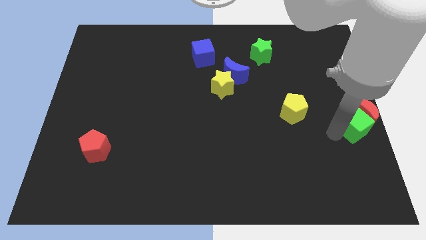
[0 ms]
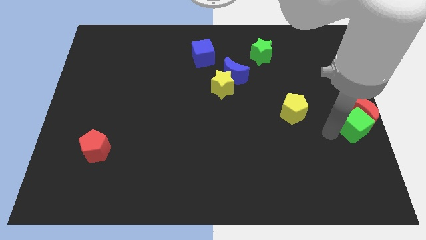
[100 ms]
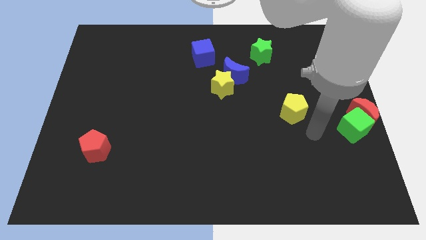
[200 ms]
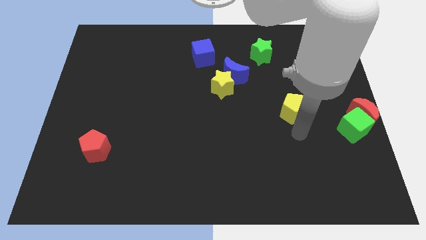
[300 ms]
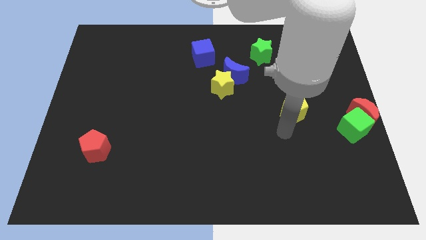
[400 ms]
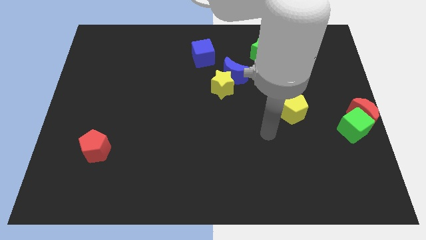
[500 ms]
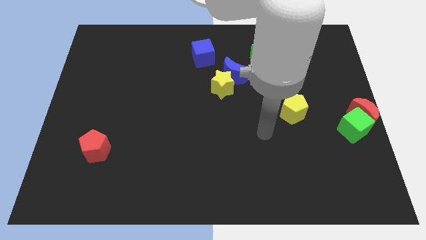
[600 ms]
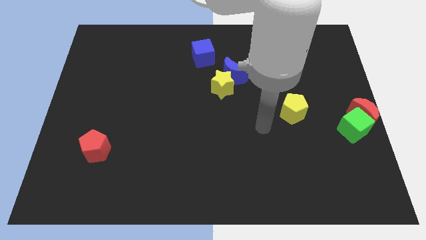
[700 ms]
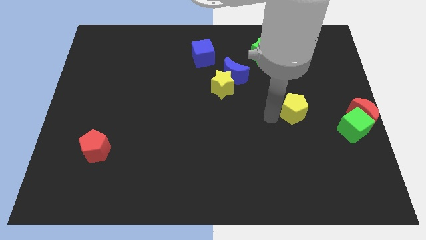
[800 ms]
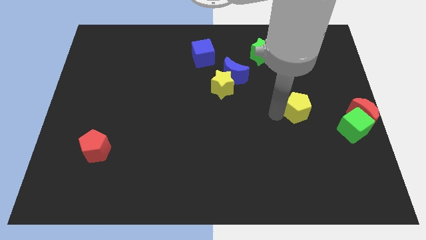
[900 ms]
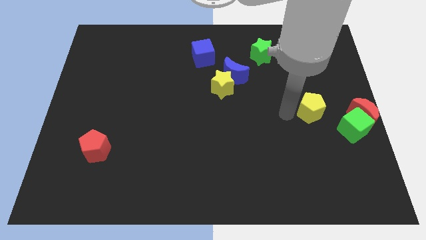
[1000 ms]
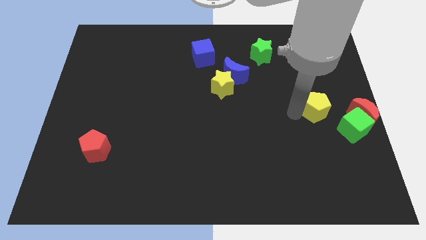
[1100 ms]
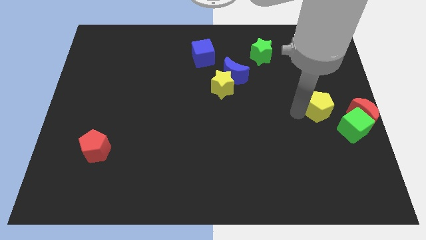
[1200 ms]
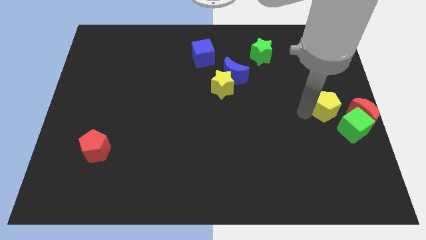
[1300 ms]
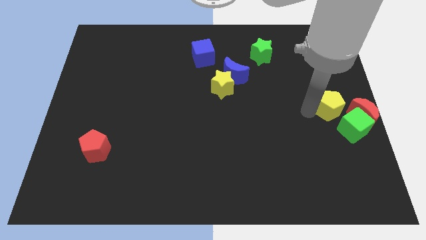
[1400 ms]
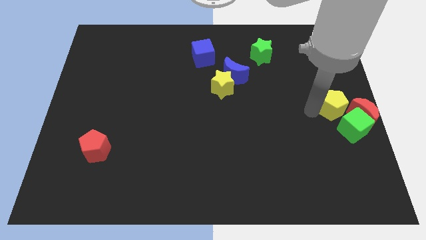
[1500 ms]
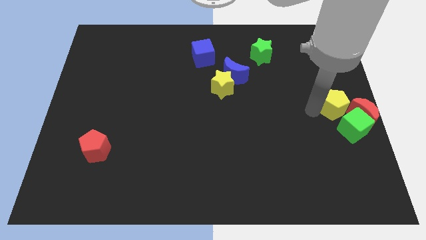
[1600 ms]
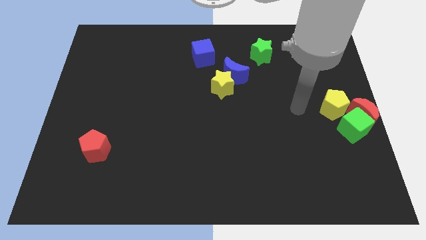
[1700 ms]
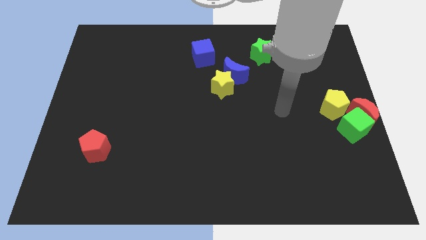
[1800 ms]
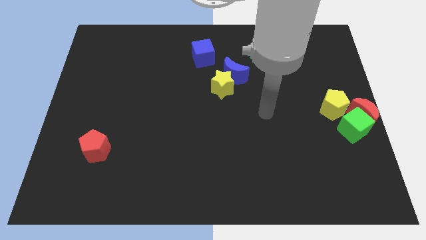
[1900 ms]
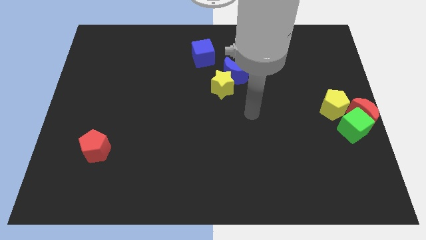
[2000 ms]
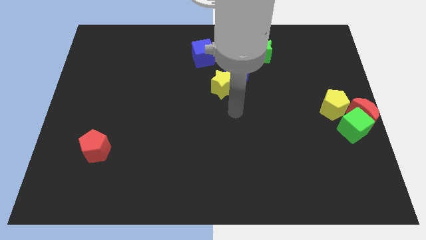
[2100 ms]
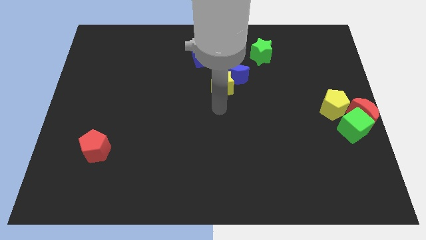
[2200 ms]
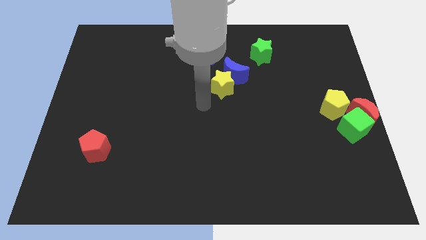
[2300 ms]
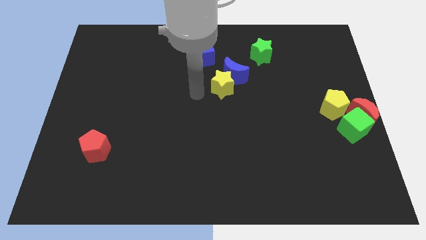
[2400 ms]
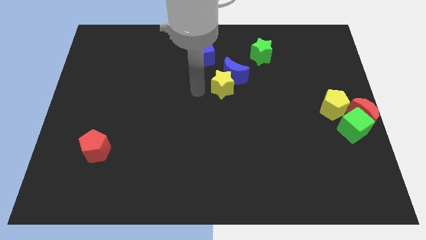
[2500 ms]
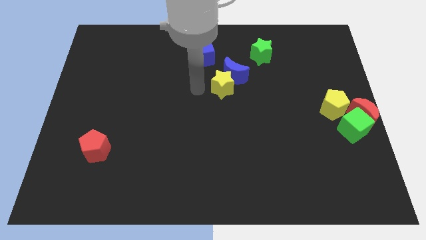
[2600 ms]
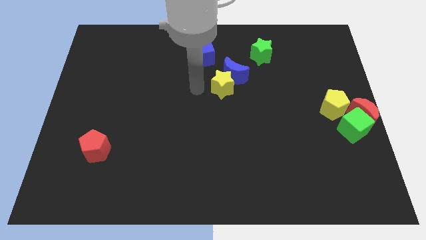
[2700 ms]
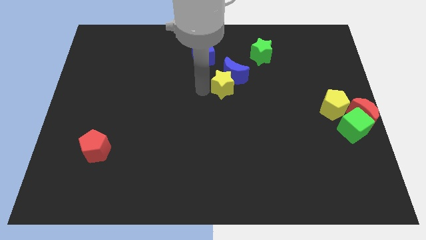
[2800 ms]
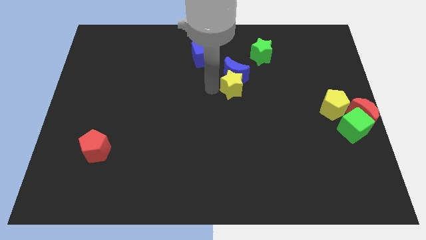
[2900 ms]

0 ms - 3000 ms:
slide the yellow pentagon into the red moon

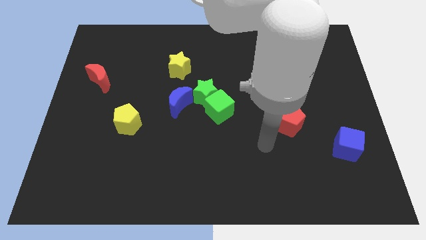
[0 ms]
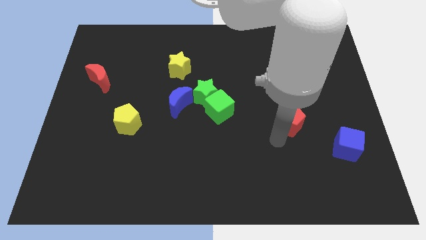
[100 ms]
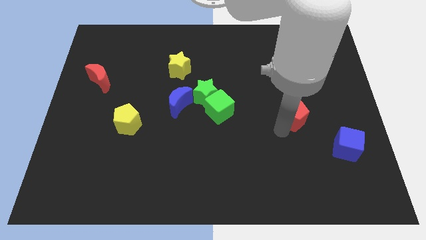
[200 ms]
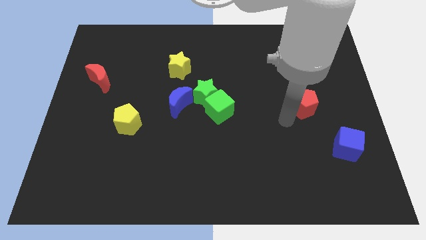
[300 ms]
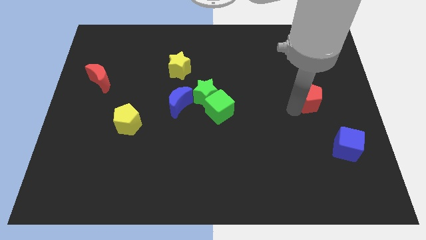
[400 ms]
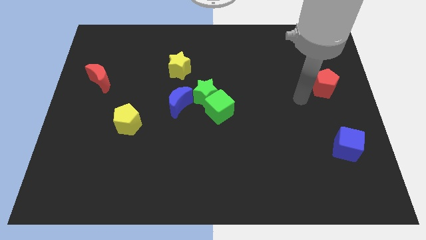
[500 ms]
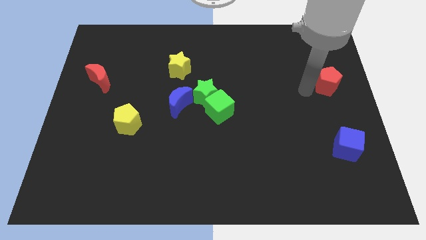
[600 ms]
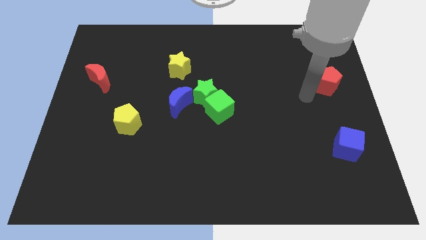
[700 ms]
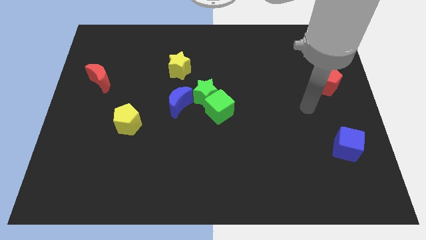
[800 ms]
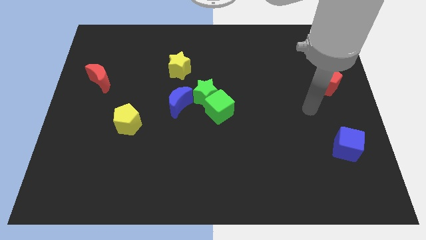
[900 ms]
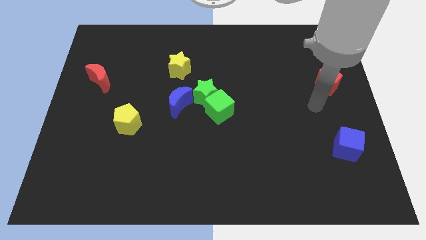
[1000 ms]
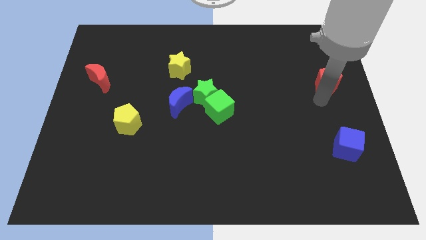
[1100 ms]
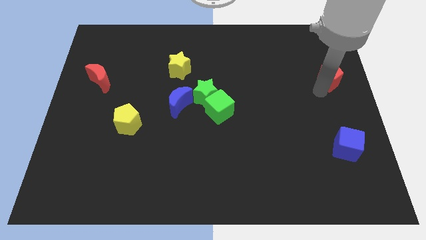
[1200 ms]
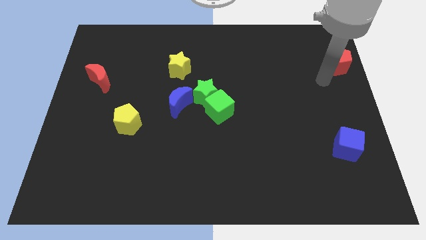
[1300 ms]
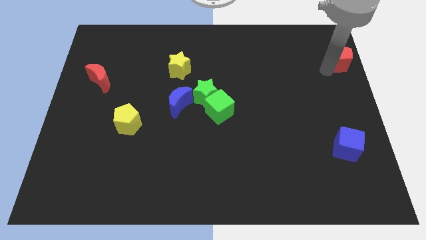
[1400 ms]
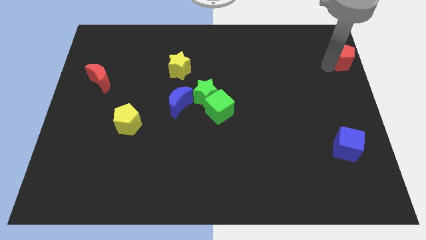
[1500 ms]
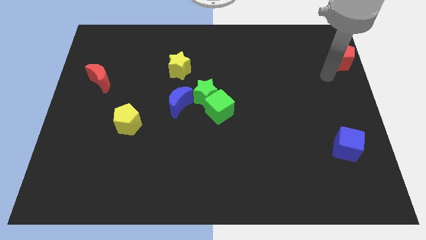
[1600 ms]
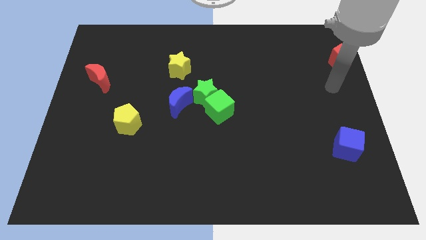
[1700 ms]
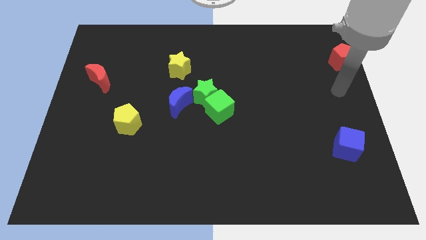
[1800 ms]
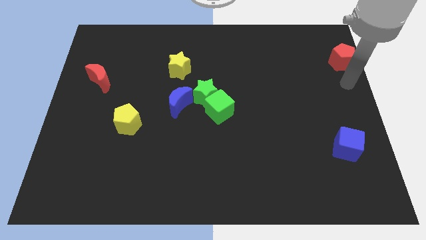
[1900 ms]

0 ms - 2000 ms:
place the red pentagon above the blue cube

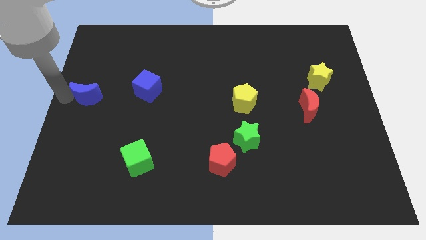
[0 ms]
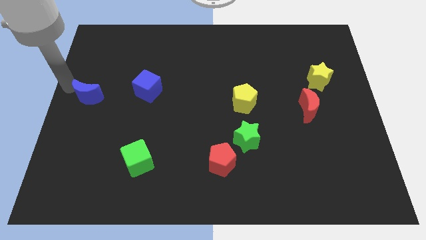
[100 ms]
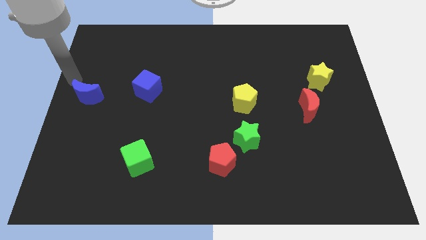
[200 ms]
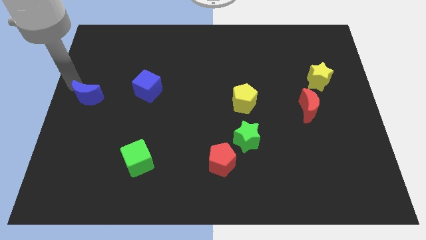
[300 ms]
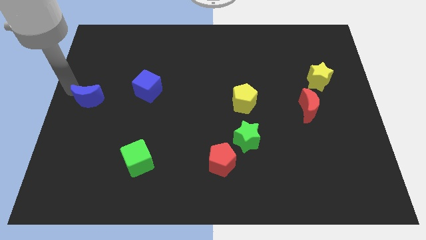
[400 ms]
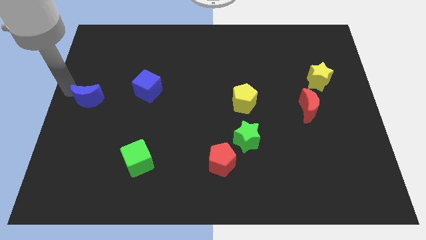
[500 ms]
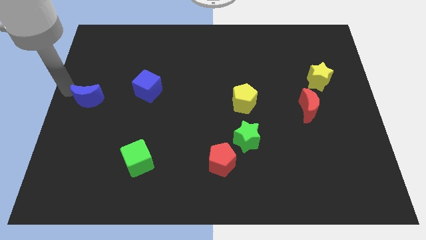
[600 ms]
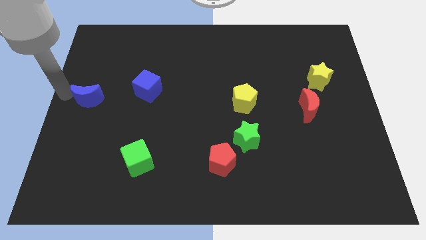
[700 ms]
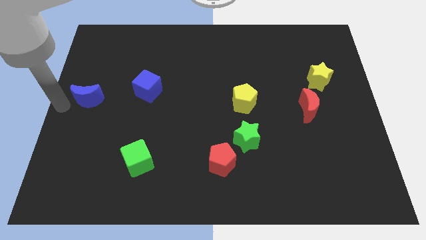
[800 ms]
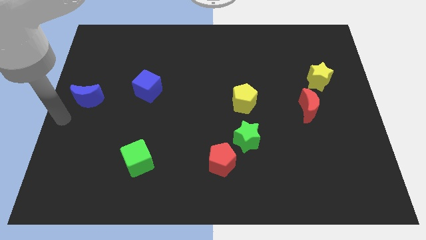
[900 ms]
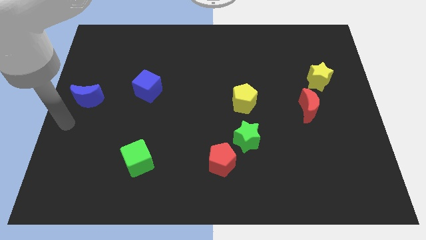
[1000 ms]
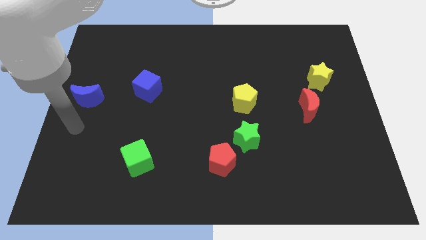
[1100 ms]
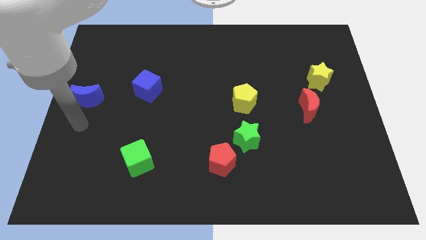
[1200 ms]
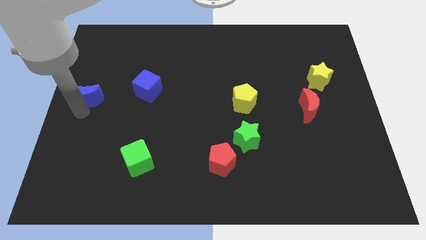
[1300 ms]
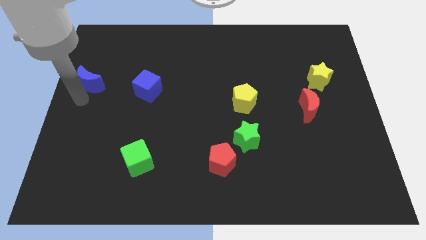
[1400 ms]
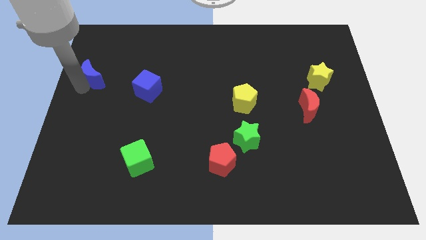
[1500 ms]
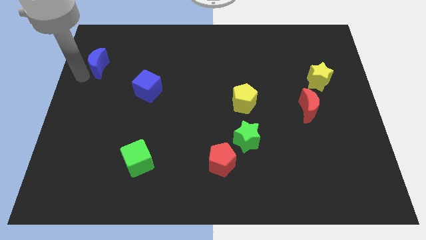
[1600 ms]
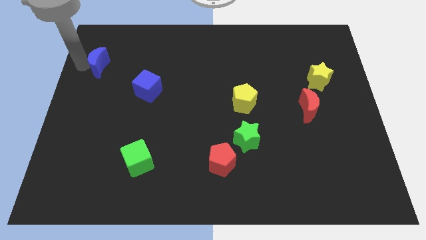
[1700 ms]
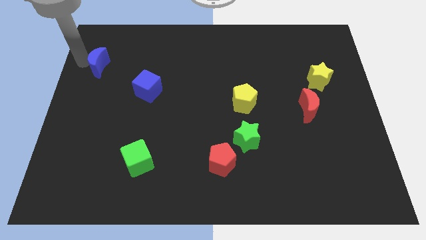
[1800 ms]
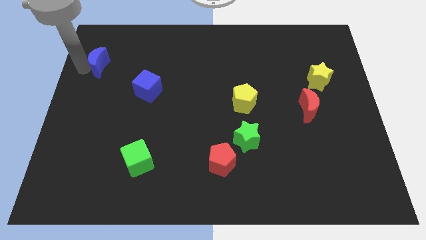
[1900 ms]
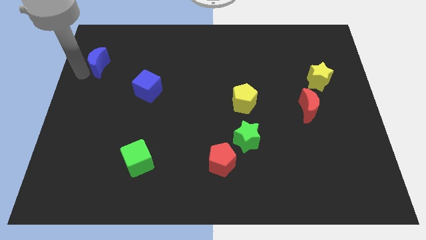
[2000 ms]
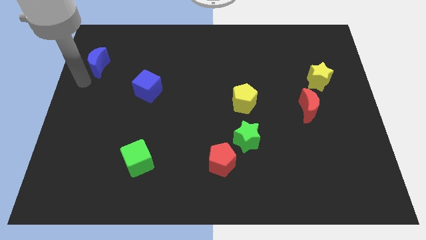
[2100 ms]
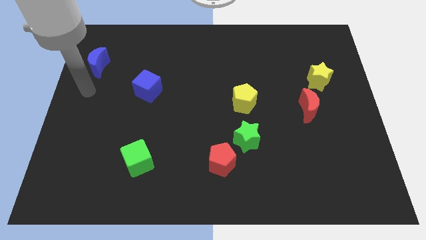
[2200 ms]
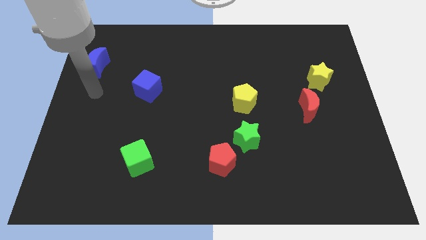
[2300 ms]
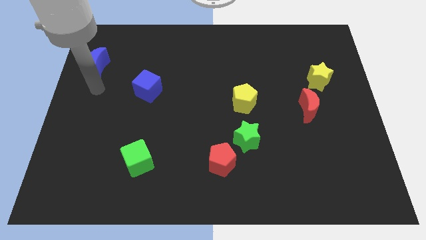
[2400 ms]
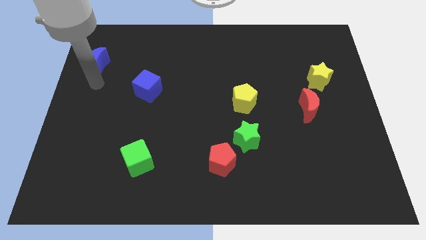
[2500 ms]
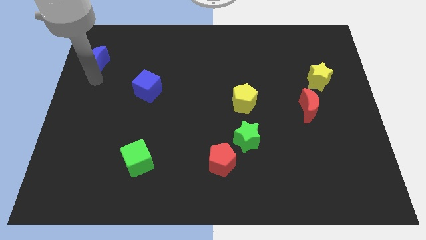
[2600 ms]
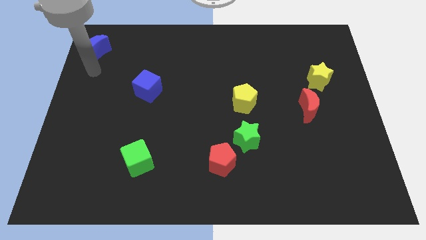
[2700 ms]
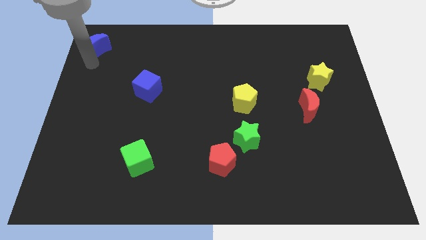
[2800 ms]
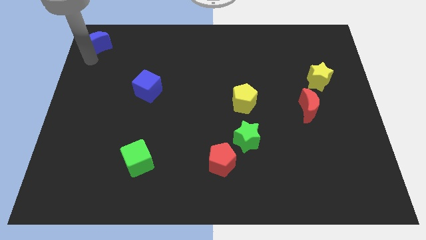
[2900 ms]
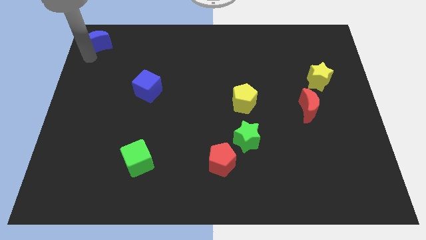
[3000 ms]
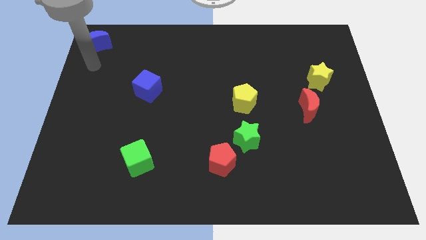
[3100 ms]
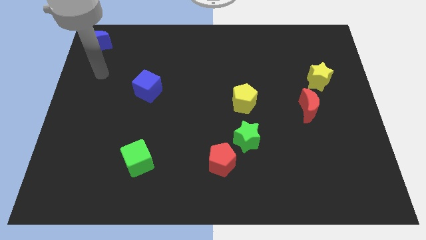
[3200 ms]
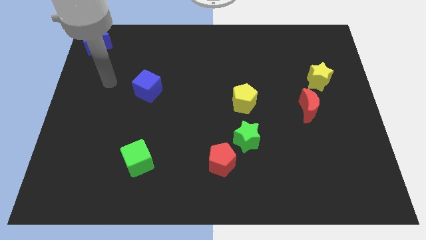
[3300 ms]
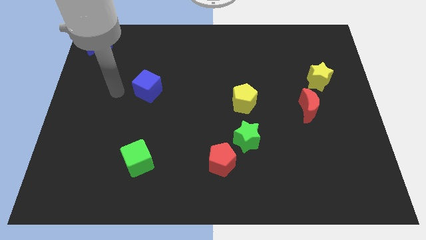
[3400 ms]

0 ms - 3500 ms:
place the blue moon towards top left

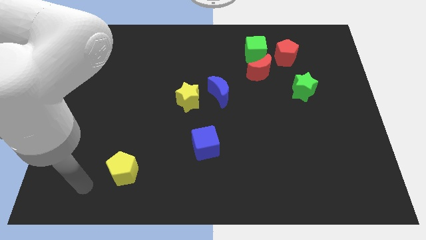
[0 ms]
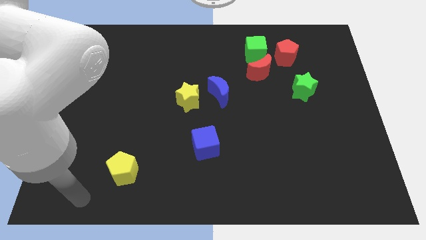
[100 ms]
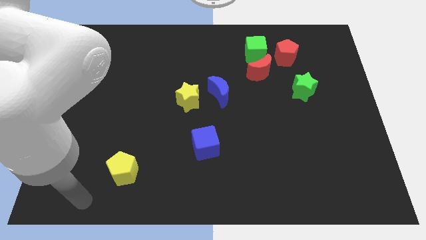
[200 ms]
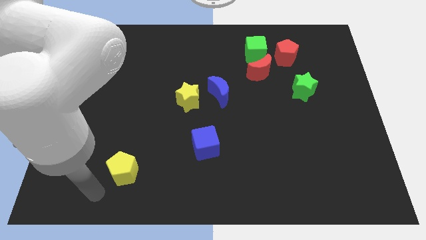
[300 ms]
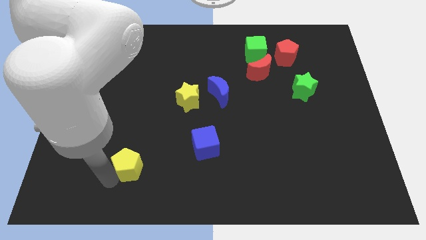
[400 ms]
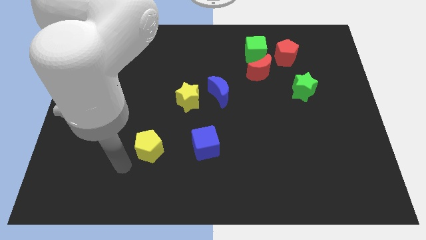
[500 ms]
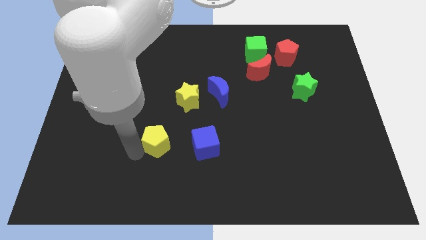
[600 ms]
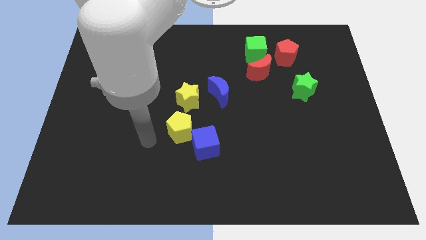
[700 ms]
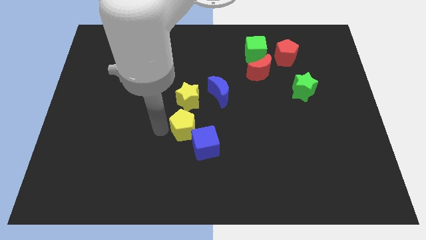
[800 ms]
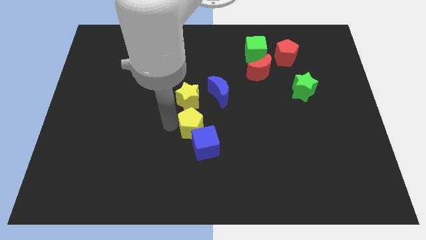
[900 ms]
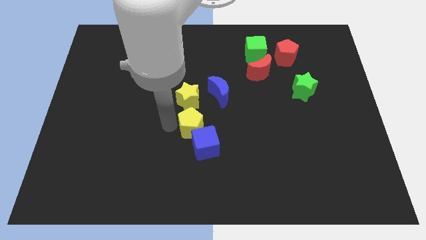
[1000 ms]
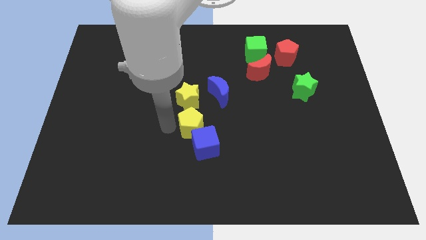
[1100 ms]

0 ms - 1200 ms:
place the yellow pentagon at the bottom of yellow star
